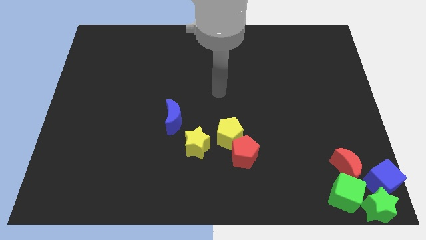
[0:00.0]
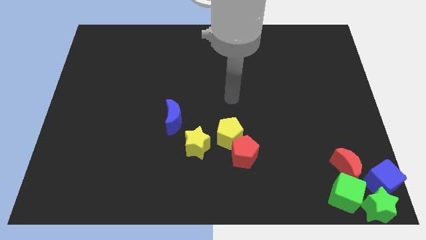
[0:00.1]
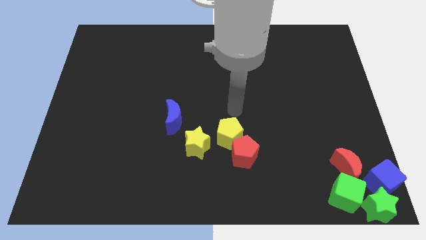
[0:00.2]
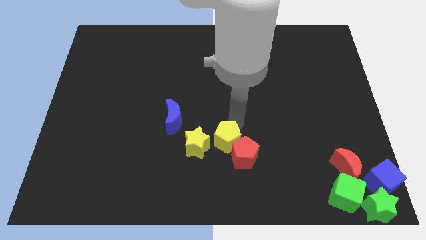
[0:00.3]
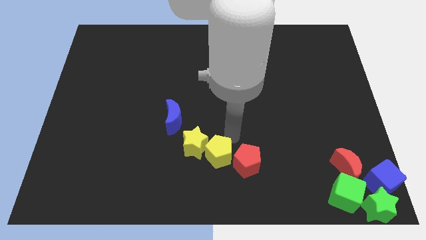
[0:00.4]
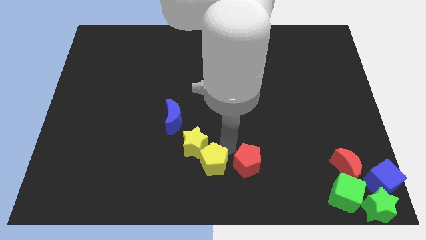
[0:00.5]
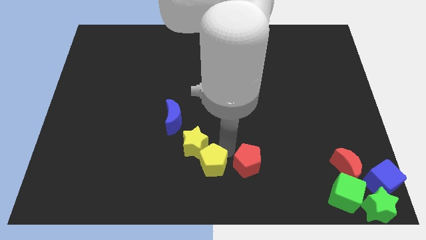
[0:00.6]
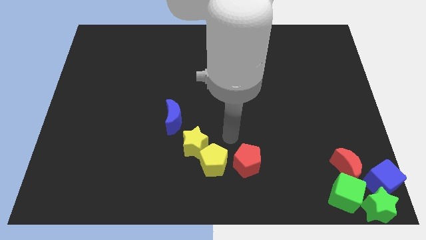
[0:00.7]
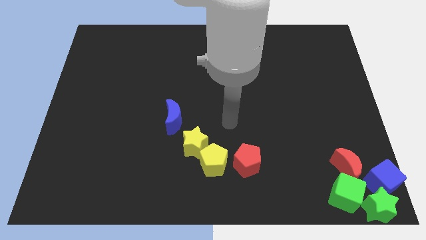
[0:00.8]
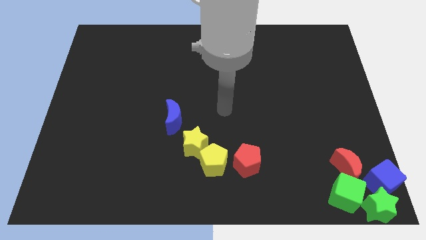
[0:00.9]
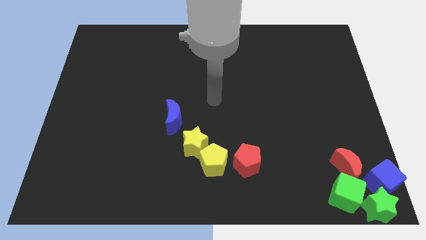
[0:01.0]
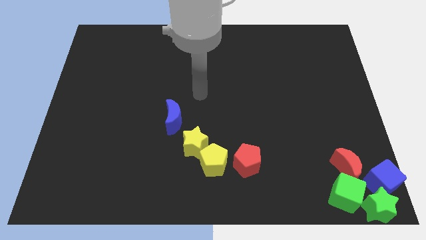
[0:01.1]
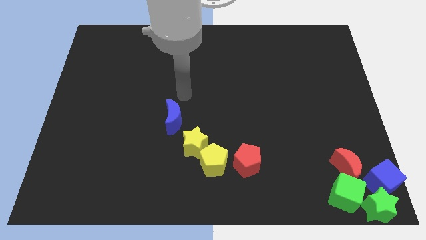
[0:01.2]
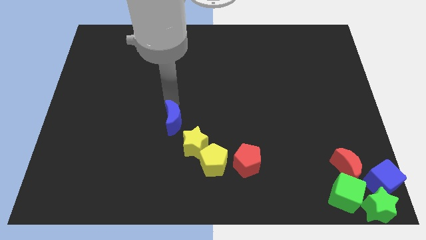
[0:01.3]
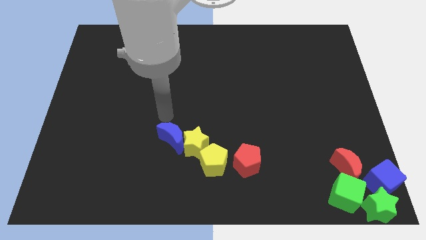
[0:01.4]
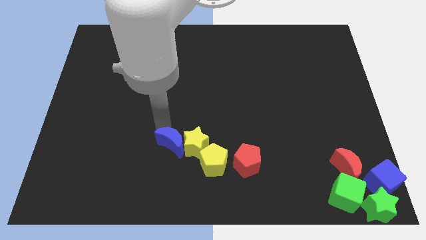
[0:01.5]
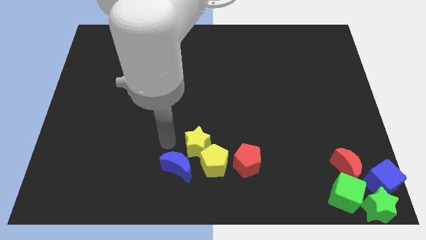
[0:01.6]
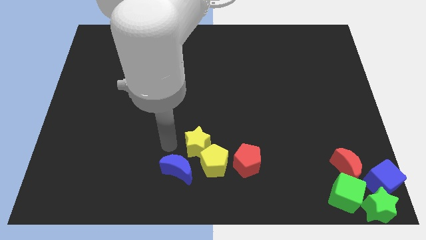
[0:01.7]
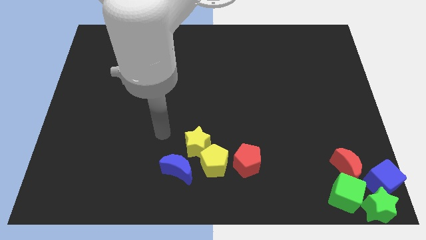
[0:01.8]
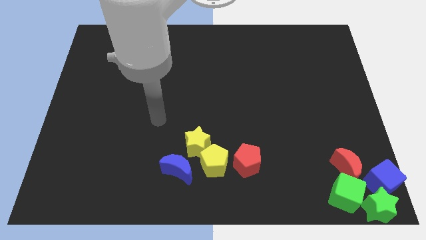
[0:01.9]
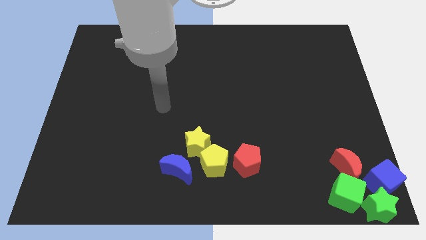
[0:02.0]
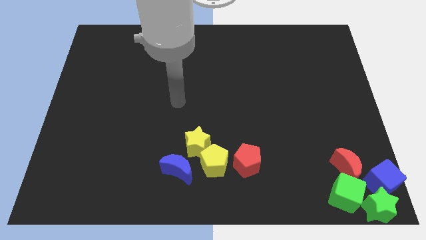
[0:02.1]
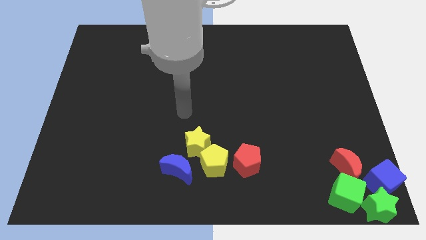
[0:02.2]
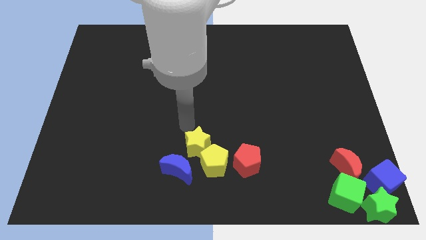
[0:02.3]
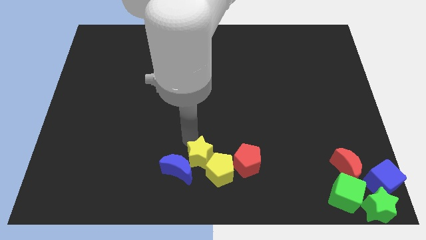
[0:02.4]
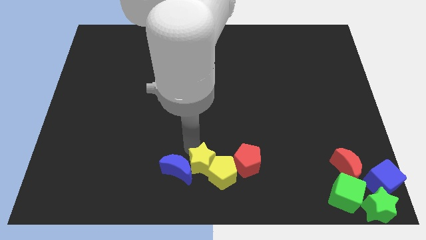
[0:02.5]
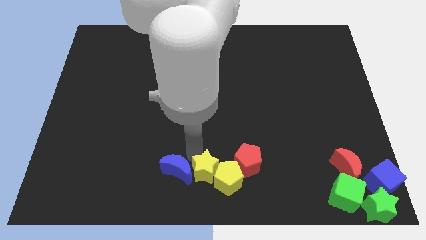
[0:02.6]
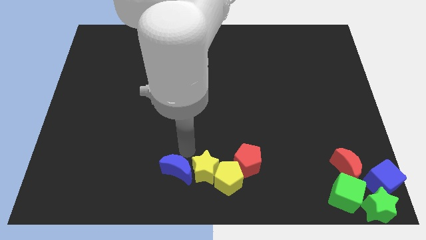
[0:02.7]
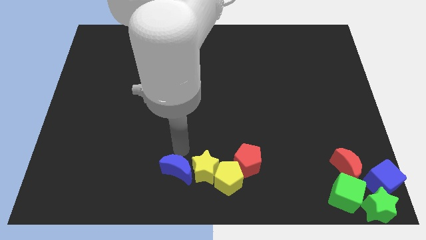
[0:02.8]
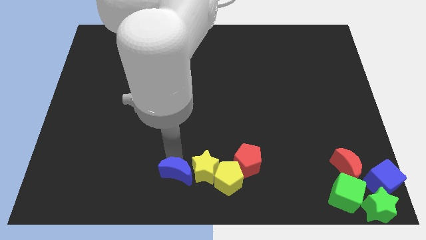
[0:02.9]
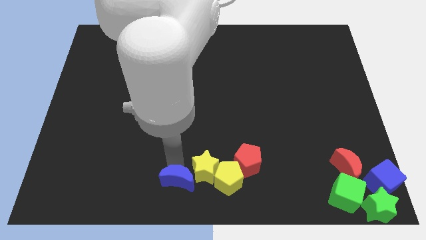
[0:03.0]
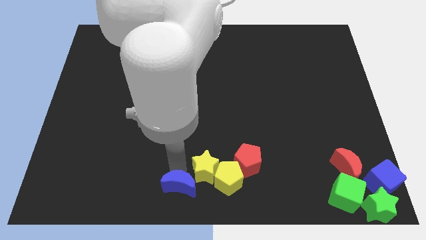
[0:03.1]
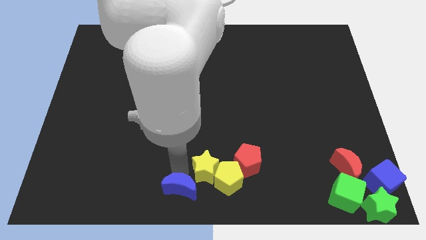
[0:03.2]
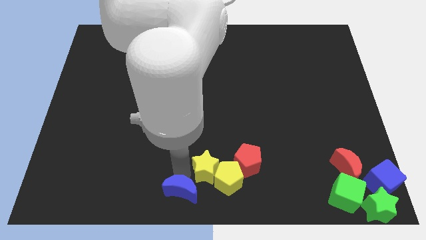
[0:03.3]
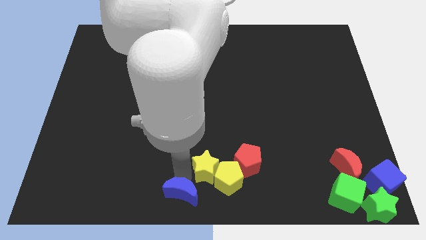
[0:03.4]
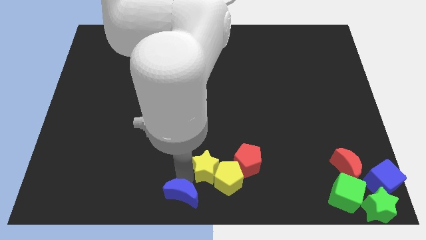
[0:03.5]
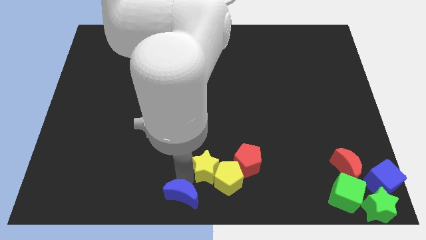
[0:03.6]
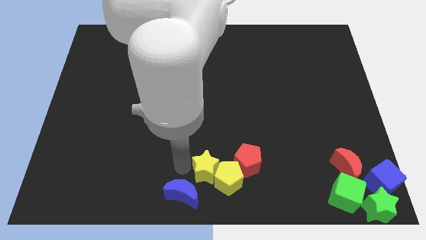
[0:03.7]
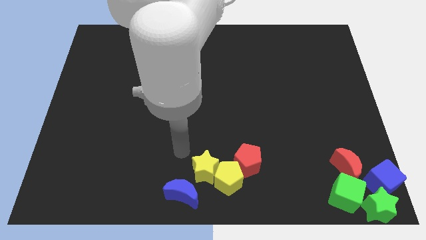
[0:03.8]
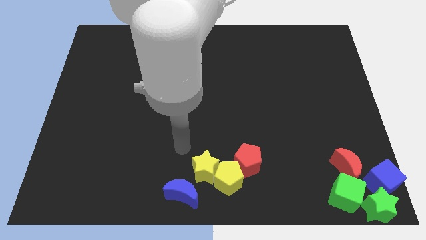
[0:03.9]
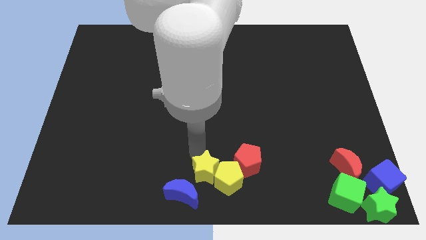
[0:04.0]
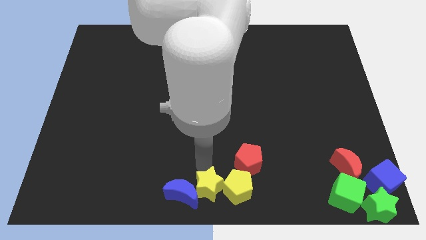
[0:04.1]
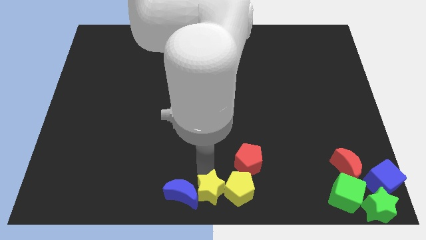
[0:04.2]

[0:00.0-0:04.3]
move the group of blocks to the bottom center of the board

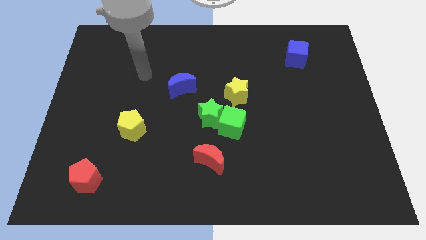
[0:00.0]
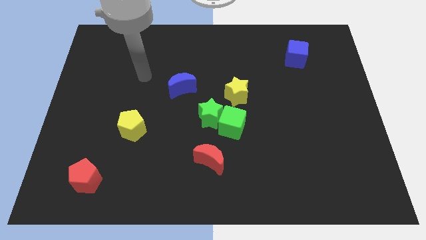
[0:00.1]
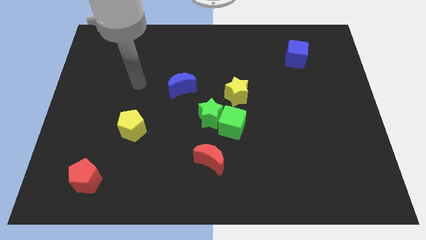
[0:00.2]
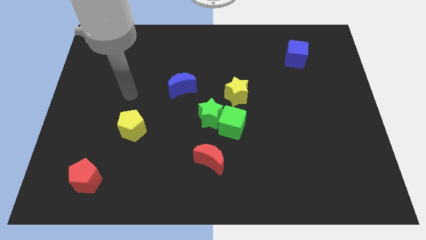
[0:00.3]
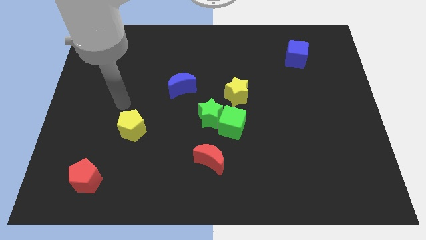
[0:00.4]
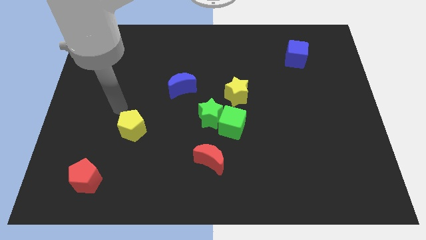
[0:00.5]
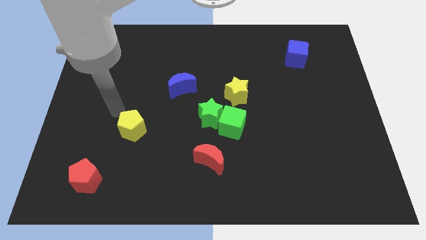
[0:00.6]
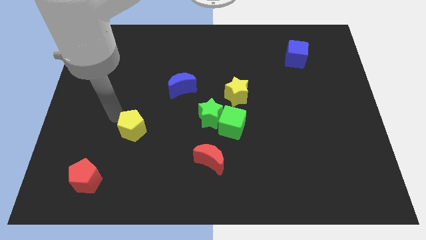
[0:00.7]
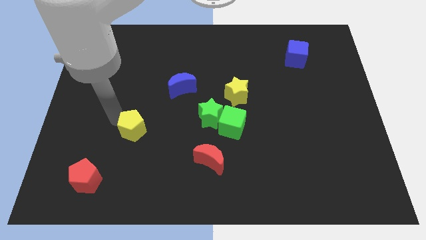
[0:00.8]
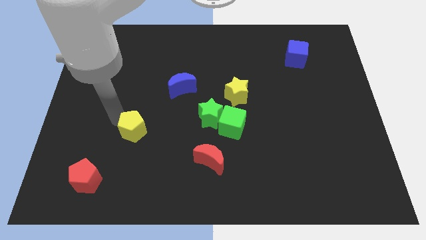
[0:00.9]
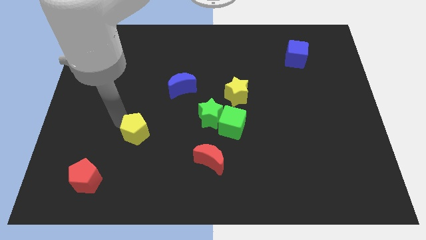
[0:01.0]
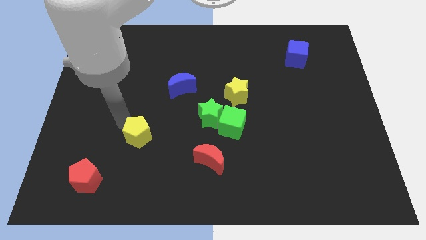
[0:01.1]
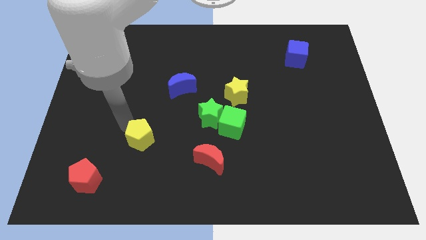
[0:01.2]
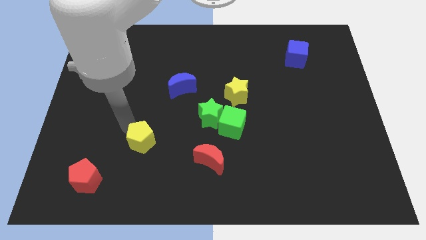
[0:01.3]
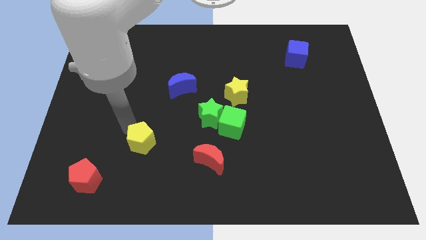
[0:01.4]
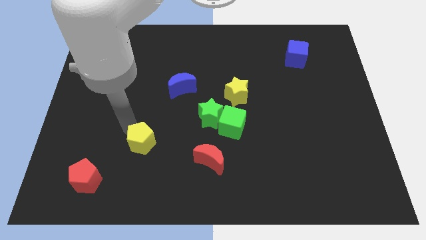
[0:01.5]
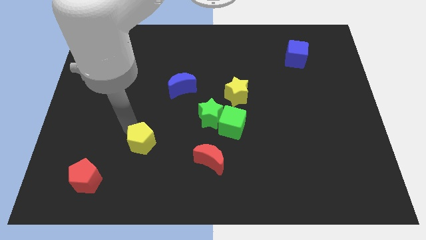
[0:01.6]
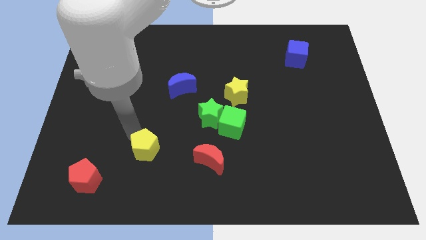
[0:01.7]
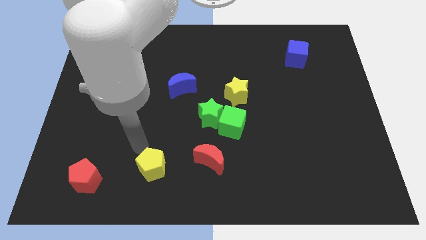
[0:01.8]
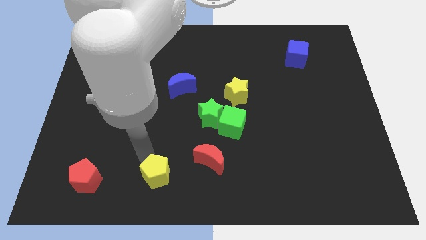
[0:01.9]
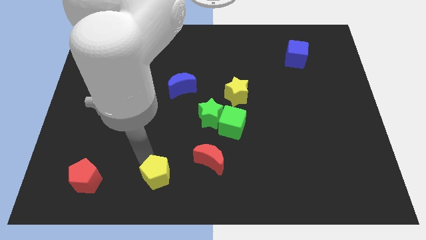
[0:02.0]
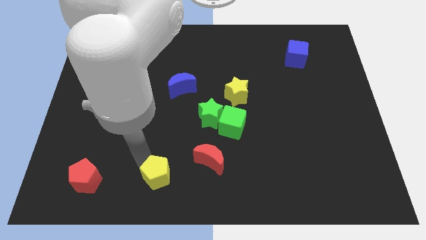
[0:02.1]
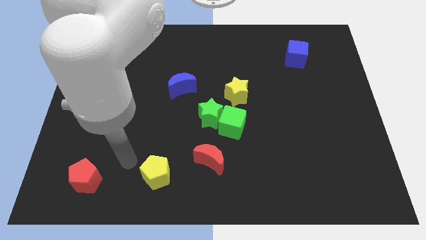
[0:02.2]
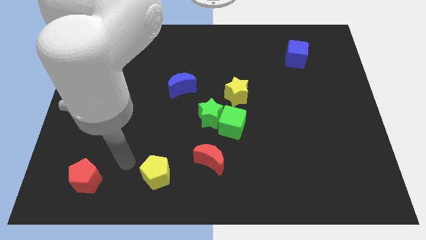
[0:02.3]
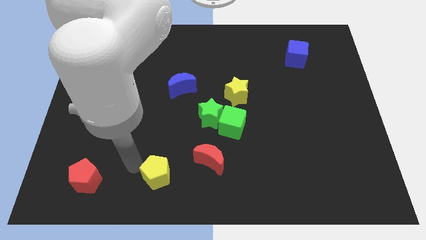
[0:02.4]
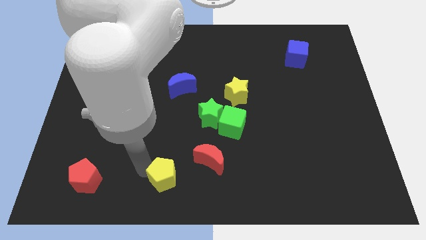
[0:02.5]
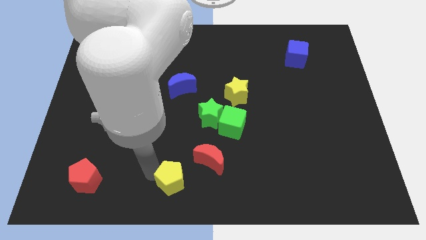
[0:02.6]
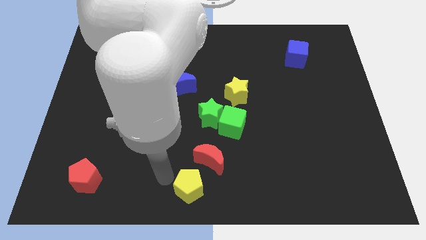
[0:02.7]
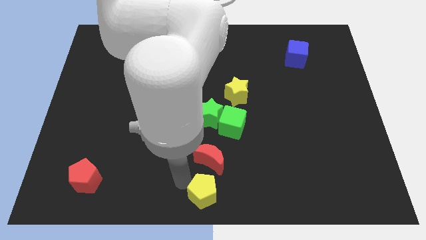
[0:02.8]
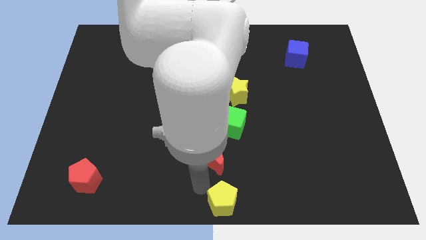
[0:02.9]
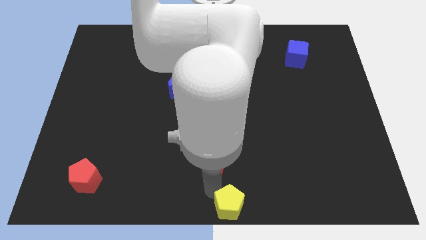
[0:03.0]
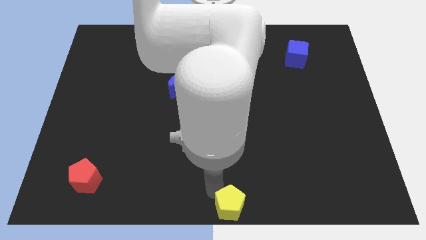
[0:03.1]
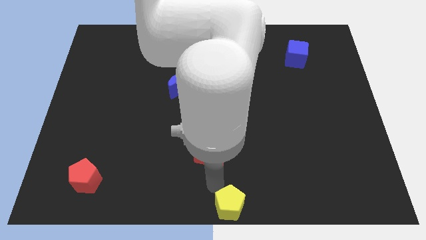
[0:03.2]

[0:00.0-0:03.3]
place the yellow pentagon at the bottom center of the board

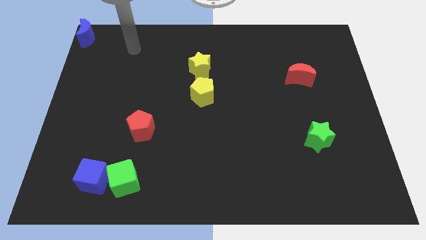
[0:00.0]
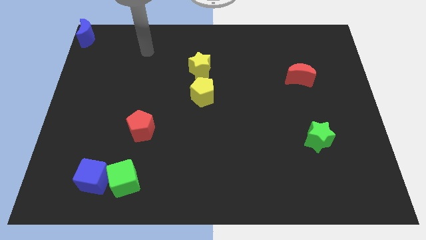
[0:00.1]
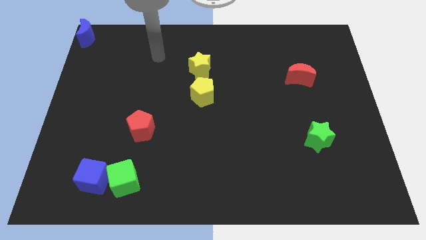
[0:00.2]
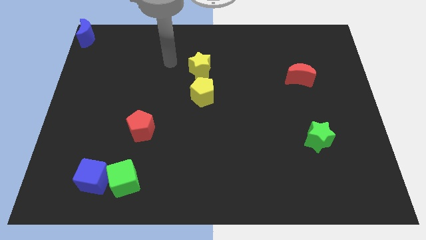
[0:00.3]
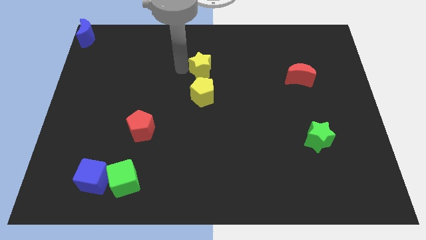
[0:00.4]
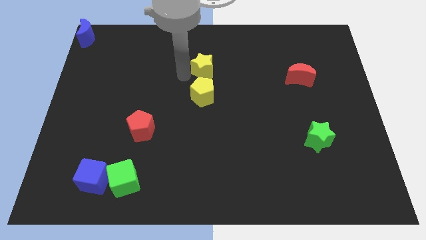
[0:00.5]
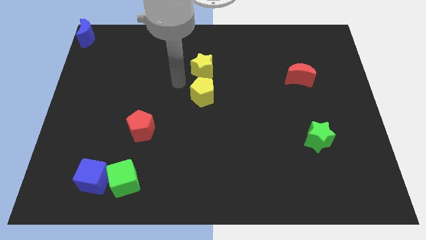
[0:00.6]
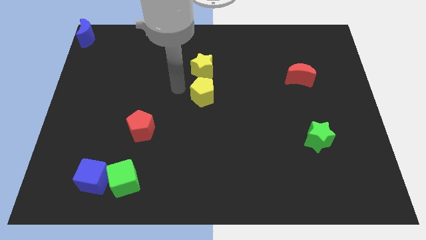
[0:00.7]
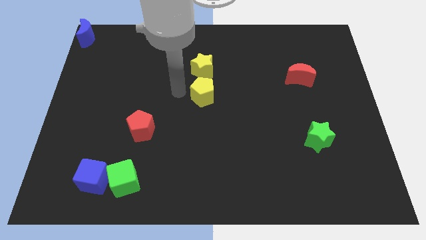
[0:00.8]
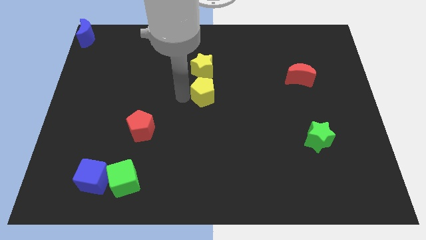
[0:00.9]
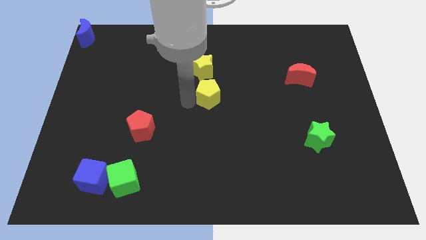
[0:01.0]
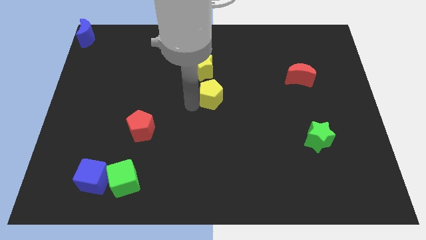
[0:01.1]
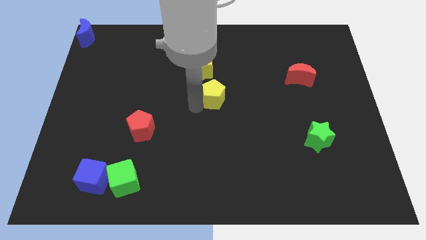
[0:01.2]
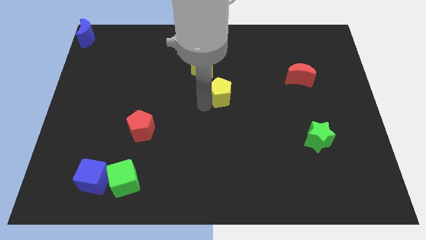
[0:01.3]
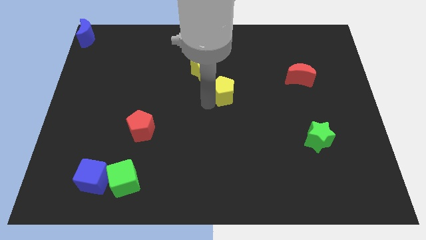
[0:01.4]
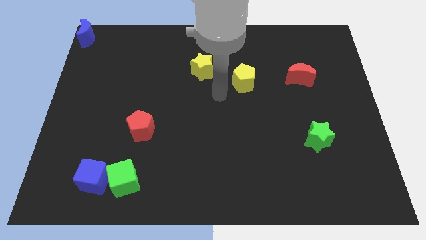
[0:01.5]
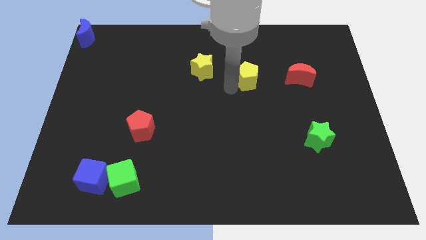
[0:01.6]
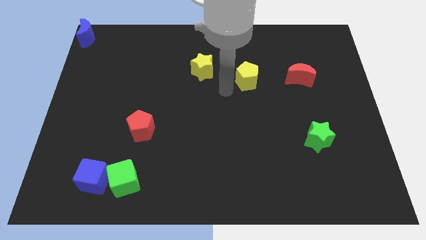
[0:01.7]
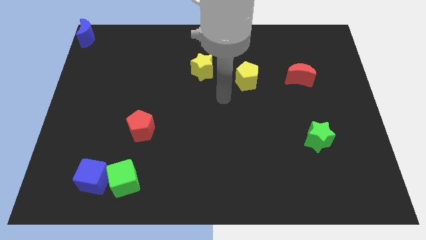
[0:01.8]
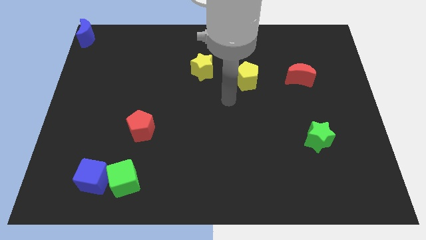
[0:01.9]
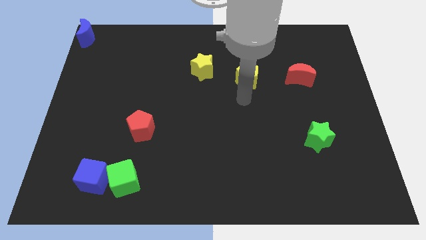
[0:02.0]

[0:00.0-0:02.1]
push the yellow pentagon towards the top right side
